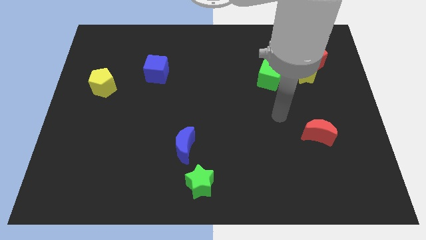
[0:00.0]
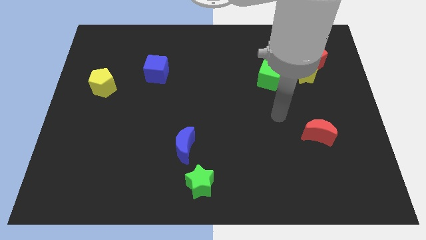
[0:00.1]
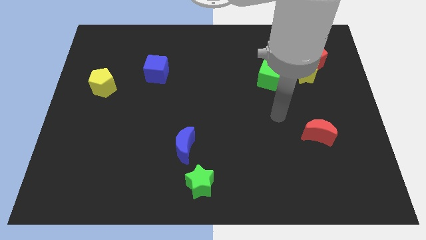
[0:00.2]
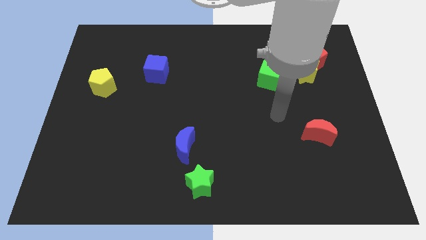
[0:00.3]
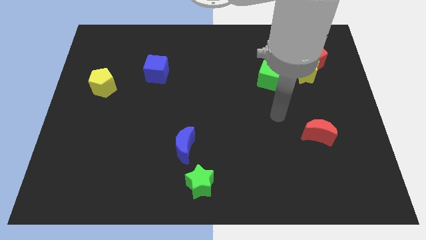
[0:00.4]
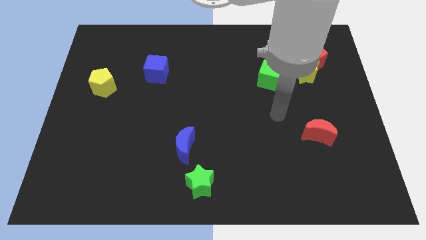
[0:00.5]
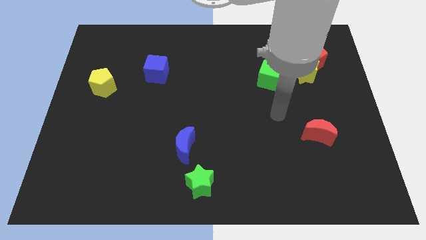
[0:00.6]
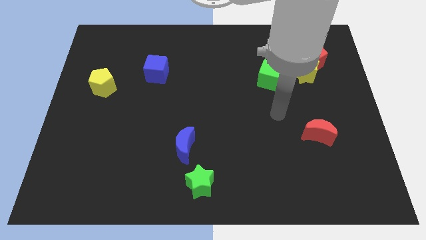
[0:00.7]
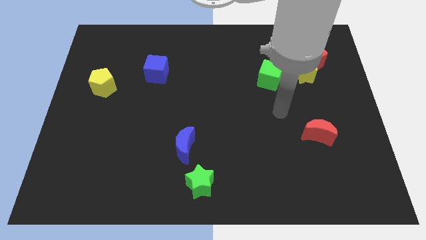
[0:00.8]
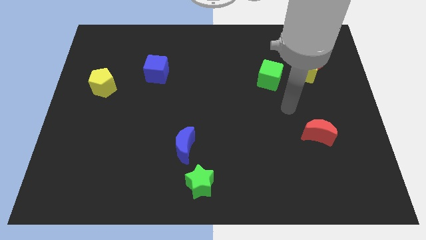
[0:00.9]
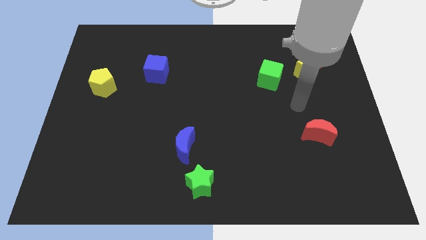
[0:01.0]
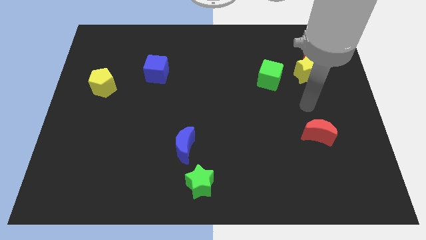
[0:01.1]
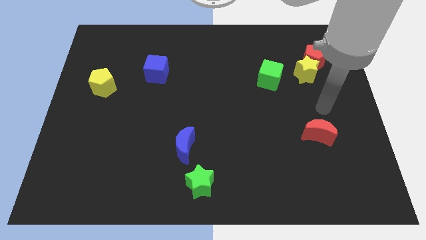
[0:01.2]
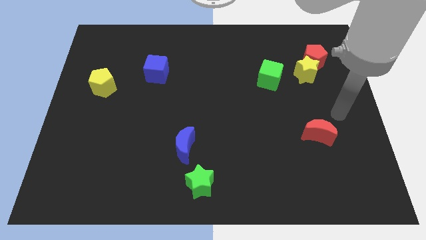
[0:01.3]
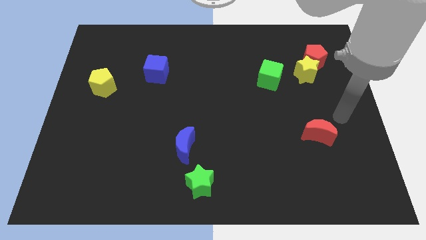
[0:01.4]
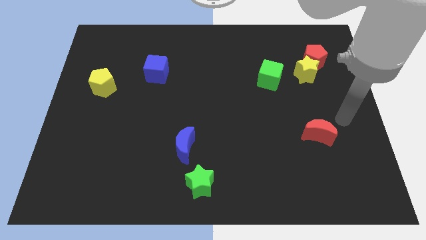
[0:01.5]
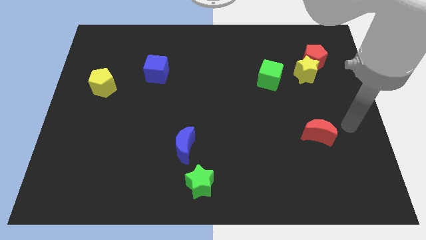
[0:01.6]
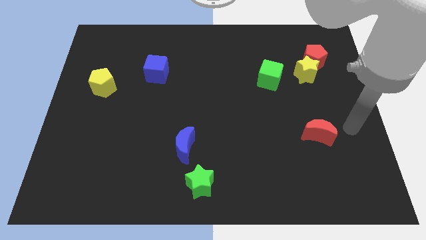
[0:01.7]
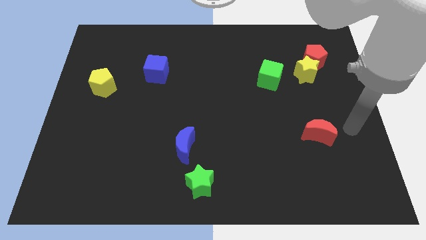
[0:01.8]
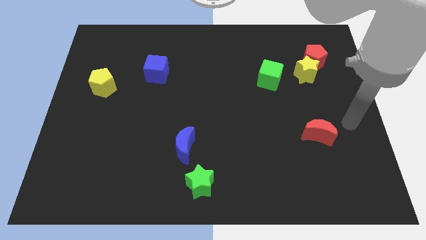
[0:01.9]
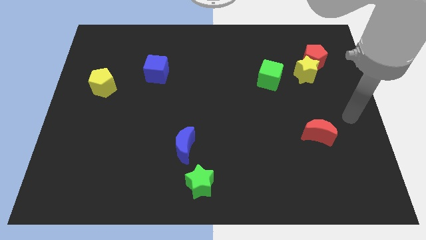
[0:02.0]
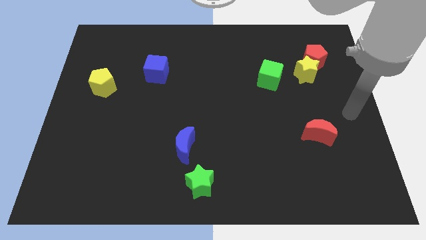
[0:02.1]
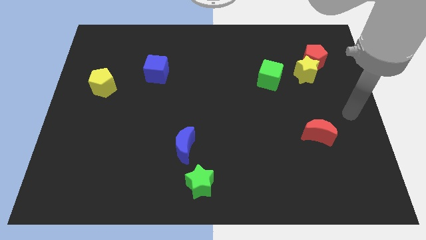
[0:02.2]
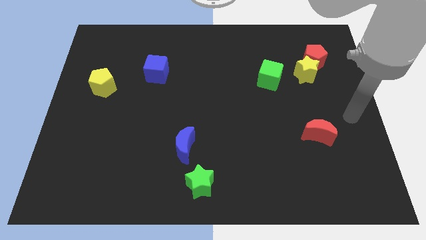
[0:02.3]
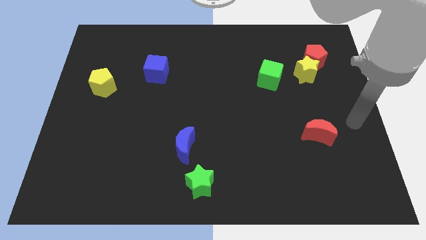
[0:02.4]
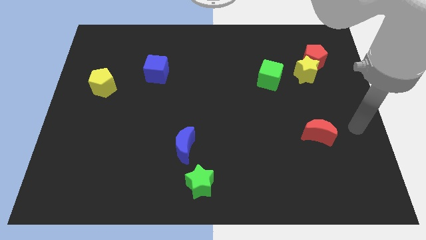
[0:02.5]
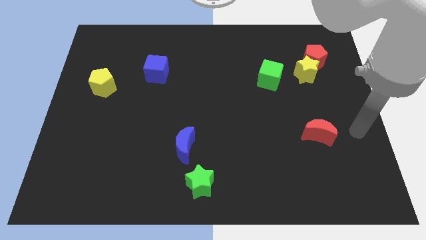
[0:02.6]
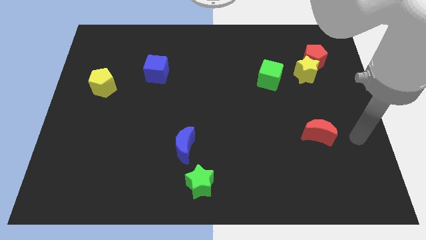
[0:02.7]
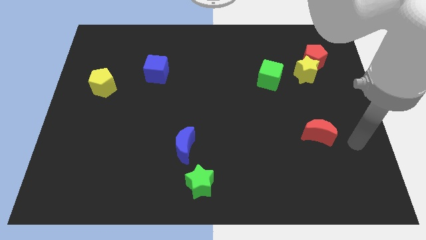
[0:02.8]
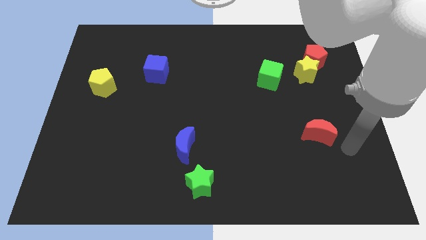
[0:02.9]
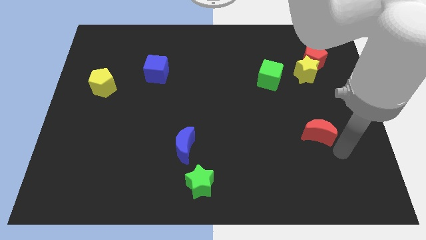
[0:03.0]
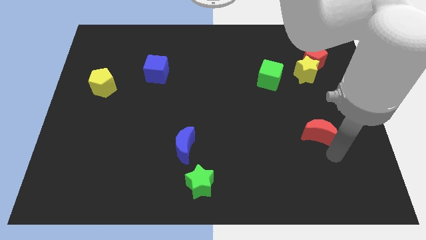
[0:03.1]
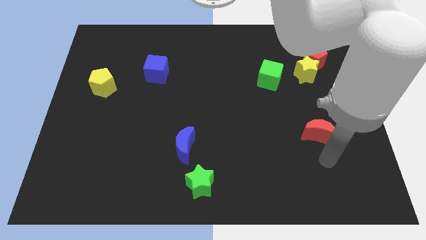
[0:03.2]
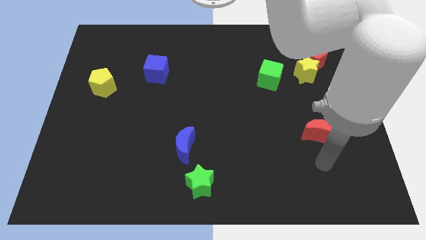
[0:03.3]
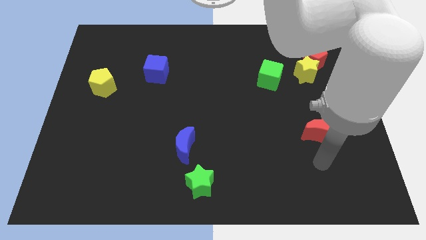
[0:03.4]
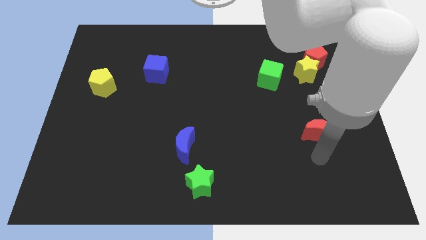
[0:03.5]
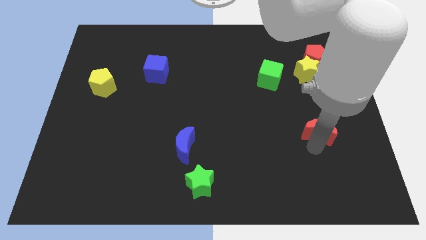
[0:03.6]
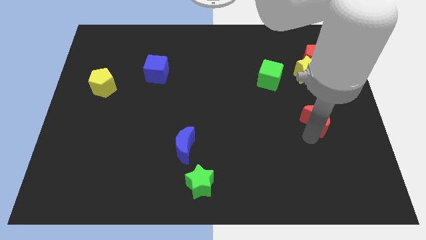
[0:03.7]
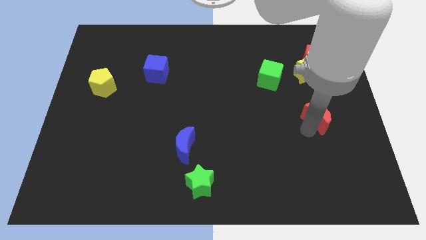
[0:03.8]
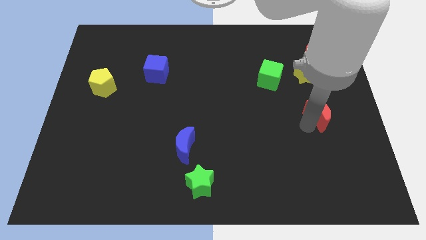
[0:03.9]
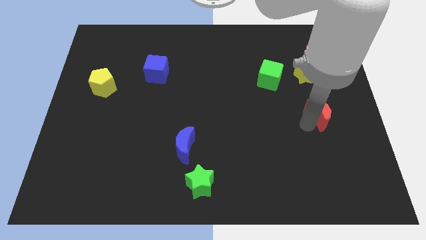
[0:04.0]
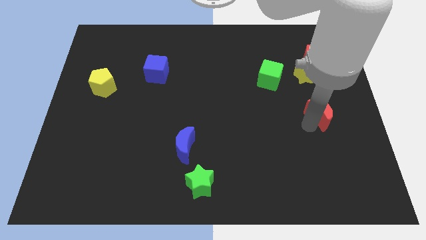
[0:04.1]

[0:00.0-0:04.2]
move the re crescent slightly to the top

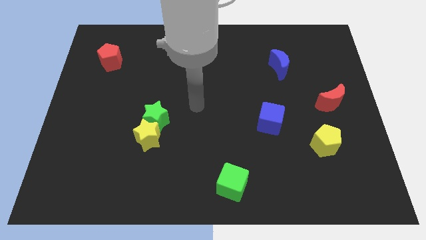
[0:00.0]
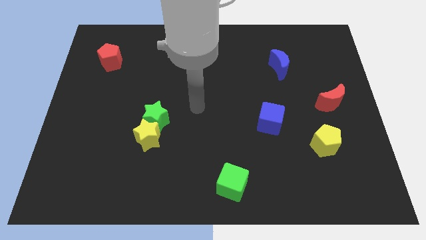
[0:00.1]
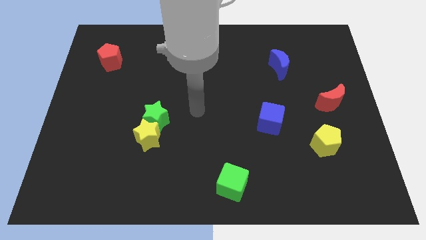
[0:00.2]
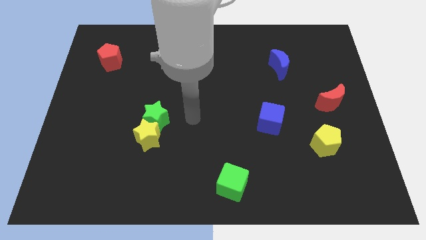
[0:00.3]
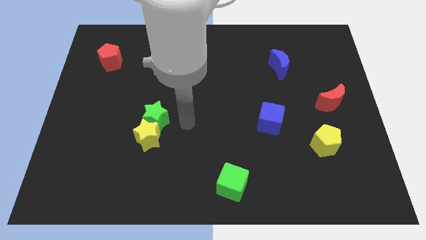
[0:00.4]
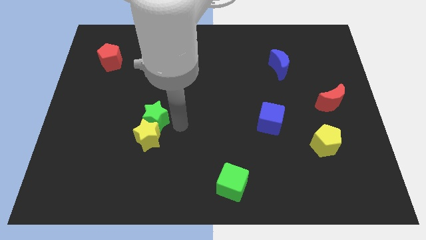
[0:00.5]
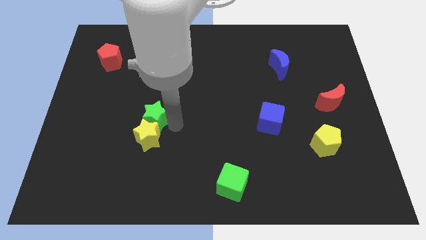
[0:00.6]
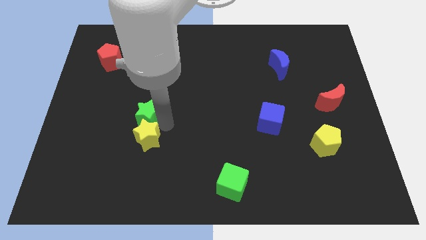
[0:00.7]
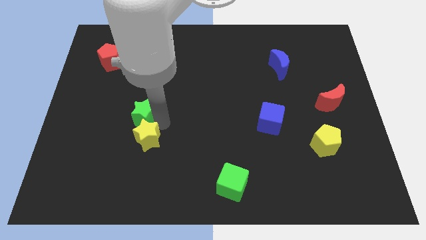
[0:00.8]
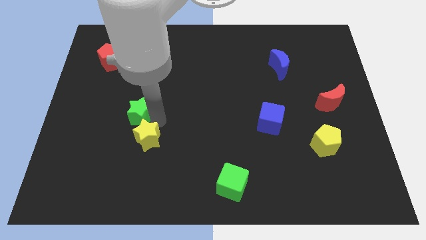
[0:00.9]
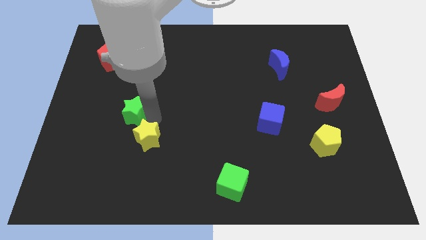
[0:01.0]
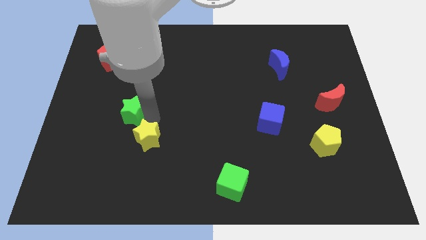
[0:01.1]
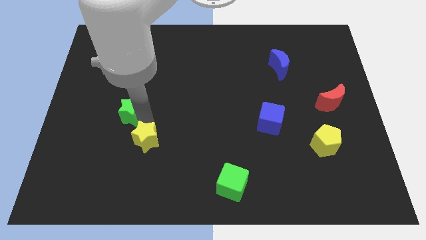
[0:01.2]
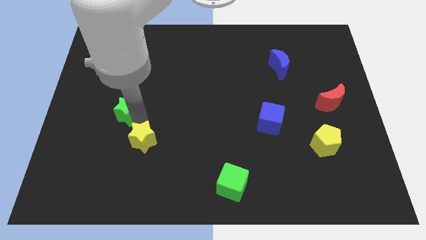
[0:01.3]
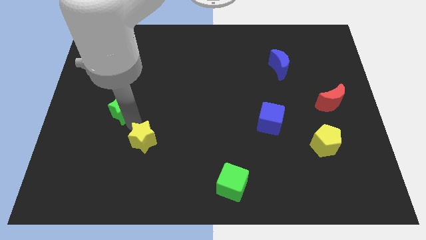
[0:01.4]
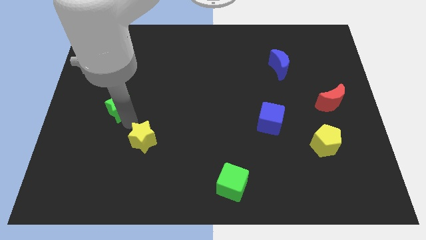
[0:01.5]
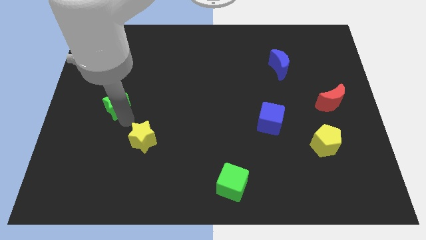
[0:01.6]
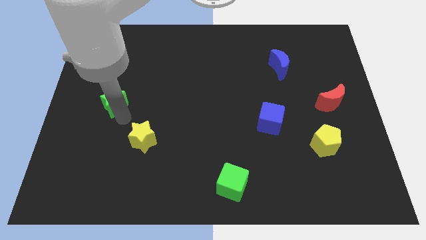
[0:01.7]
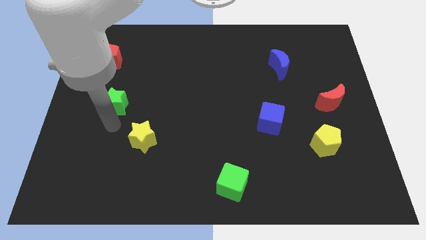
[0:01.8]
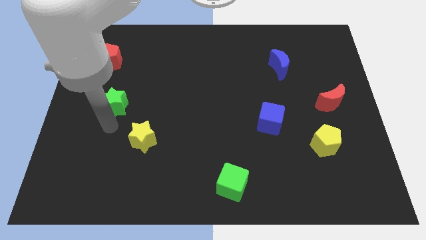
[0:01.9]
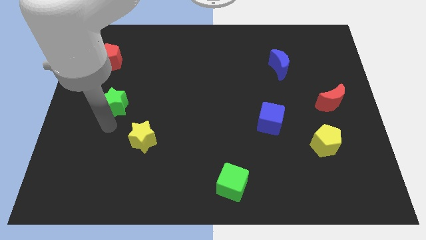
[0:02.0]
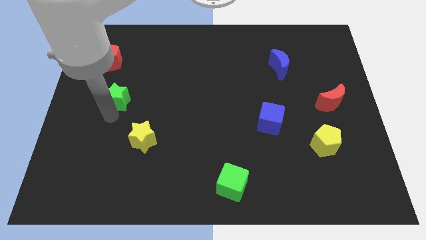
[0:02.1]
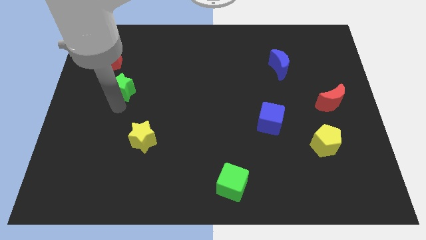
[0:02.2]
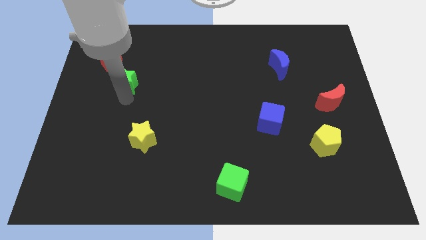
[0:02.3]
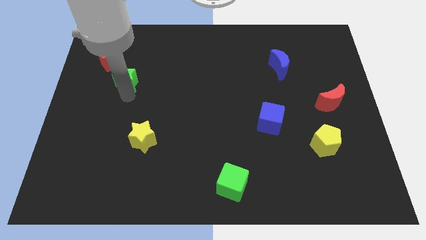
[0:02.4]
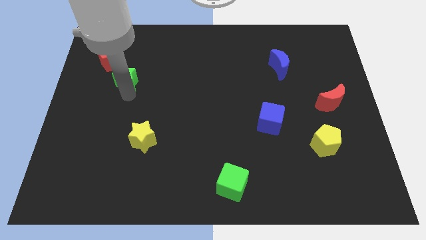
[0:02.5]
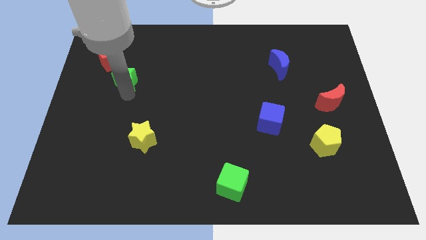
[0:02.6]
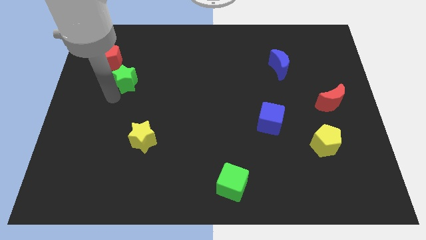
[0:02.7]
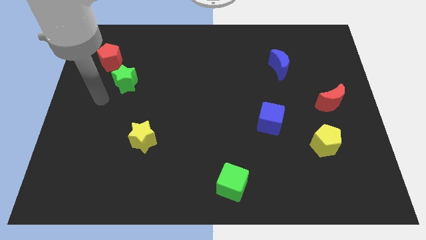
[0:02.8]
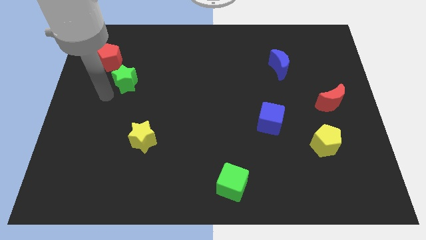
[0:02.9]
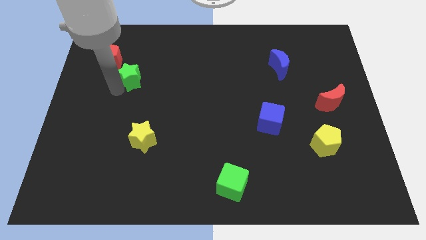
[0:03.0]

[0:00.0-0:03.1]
move green star close to the red pentagon

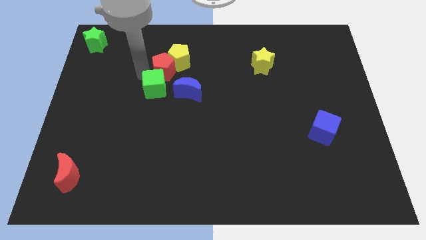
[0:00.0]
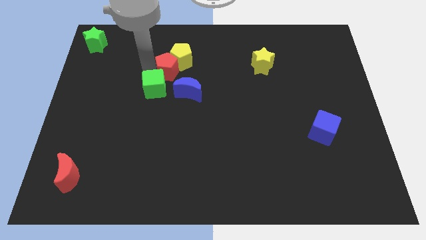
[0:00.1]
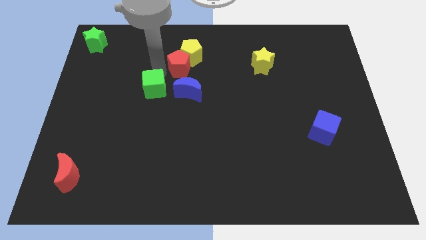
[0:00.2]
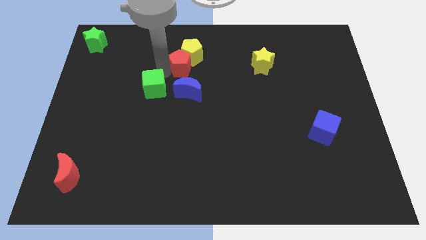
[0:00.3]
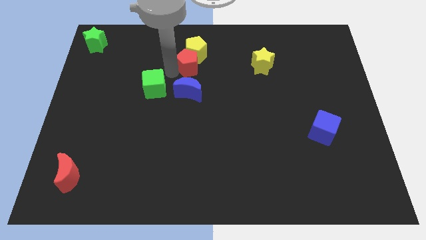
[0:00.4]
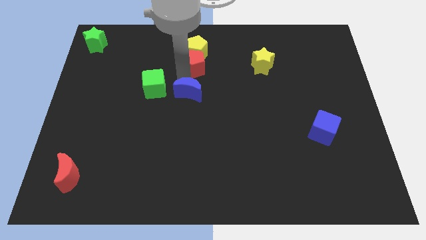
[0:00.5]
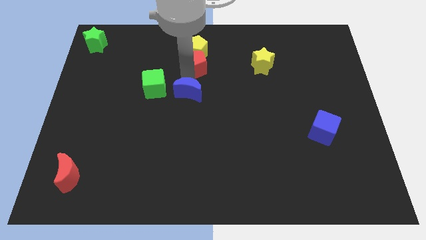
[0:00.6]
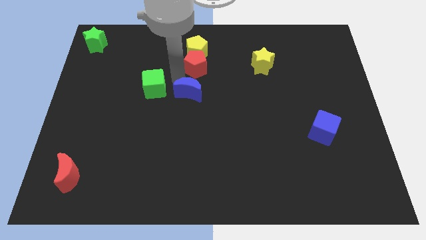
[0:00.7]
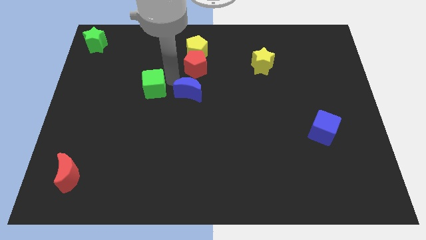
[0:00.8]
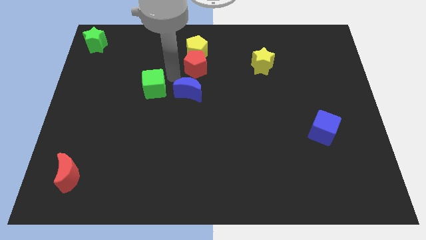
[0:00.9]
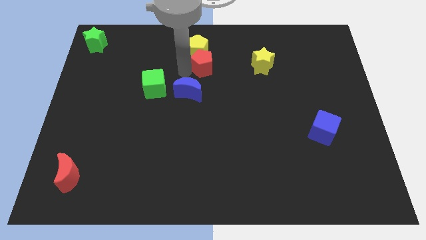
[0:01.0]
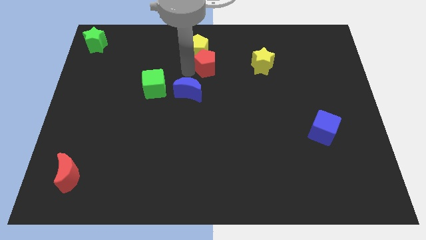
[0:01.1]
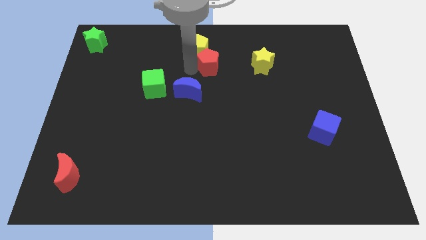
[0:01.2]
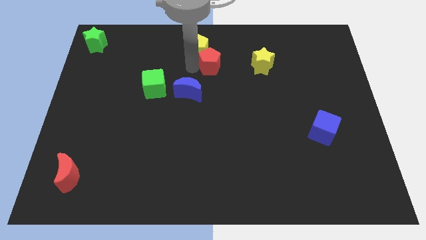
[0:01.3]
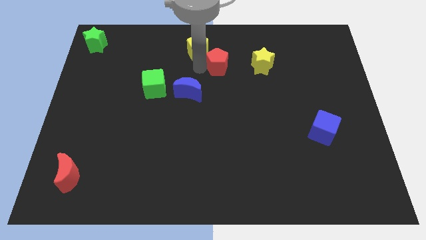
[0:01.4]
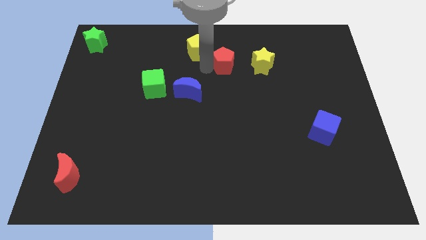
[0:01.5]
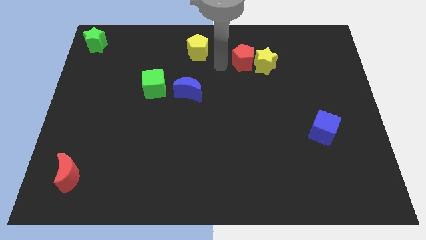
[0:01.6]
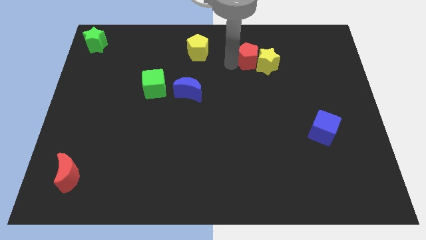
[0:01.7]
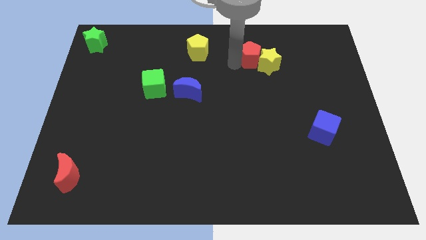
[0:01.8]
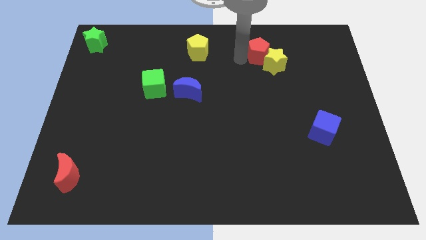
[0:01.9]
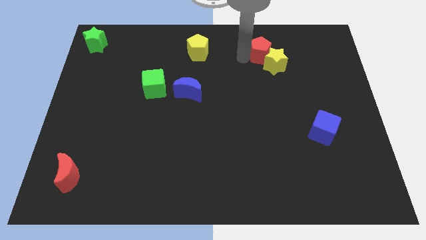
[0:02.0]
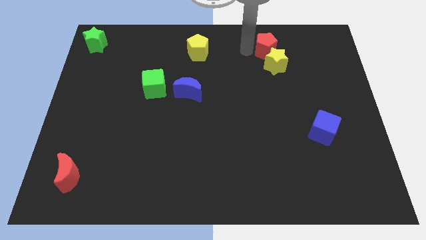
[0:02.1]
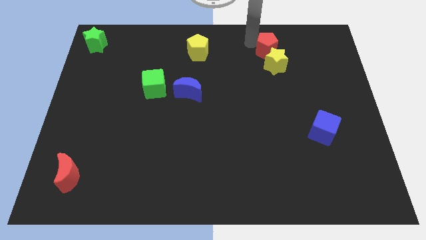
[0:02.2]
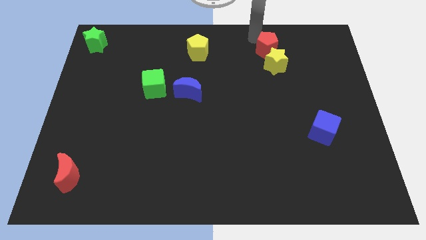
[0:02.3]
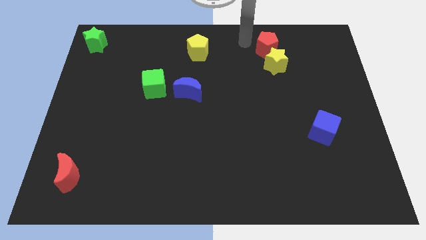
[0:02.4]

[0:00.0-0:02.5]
push the red pentagon towards the top of the yellow star
